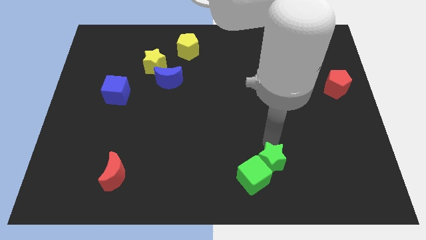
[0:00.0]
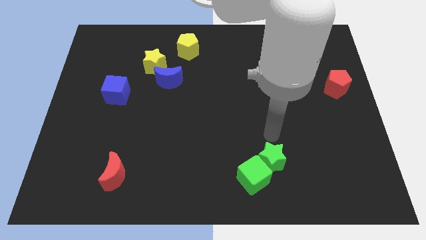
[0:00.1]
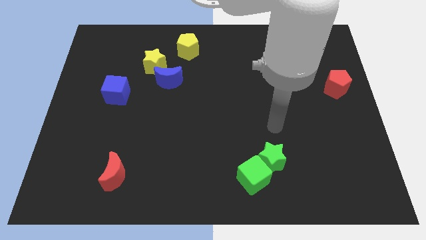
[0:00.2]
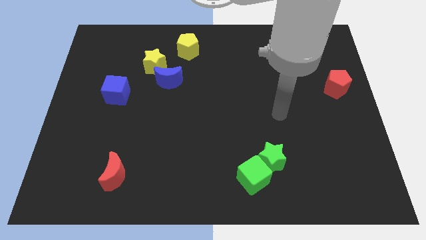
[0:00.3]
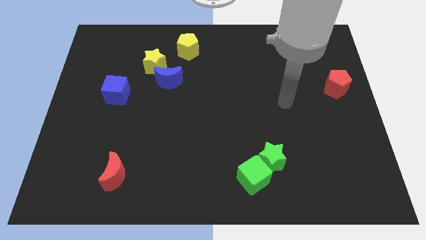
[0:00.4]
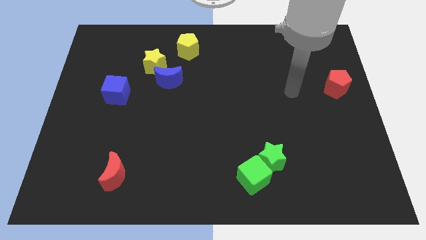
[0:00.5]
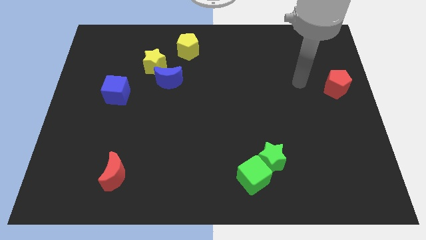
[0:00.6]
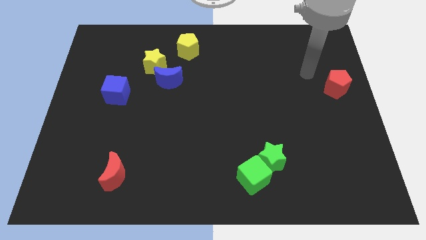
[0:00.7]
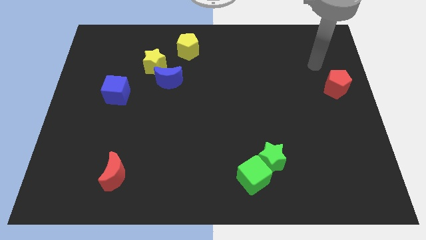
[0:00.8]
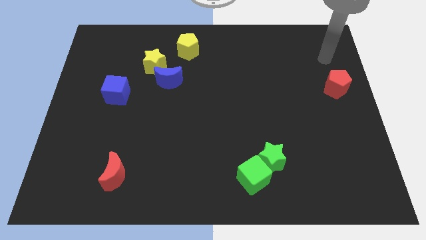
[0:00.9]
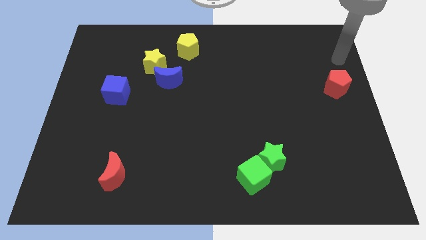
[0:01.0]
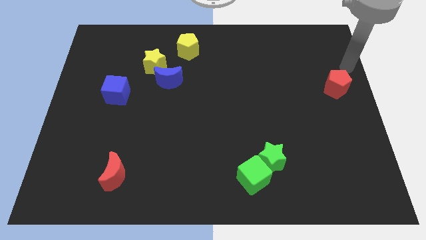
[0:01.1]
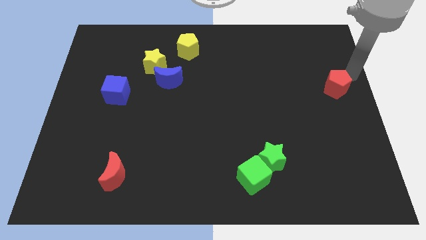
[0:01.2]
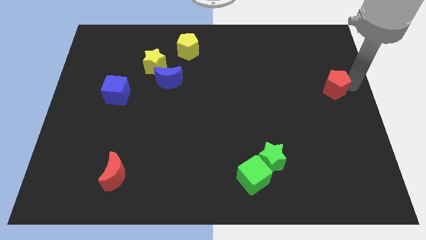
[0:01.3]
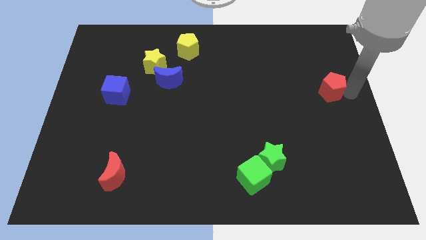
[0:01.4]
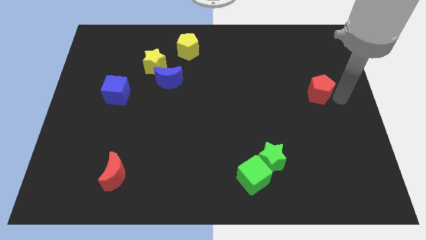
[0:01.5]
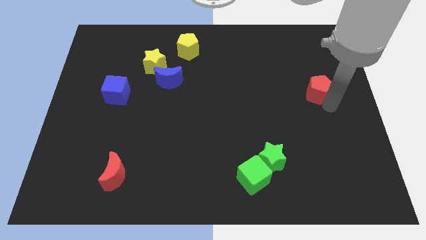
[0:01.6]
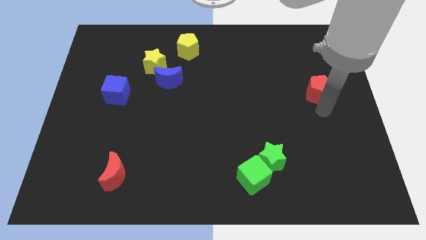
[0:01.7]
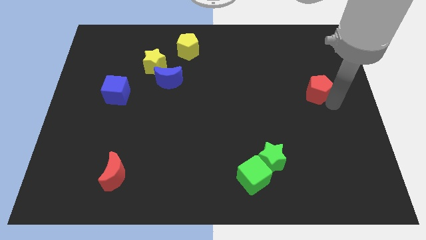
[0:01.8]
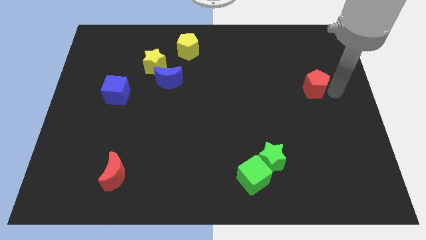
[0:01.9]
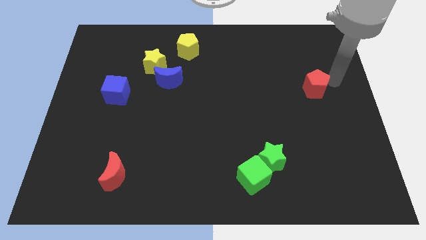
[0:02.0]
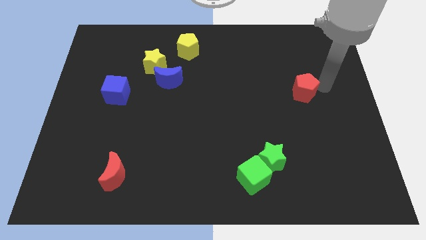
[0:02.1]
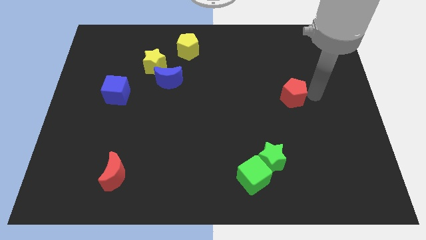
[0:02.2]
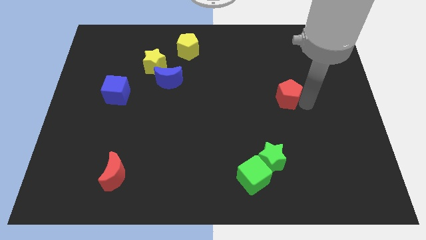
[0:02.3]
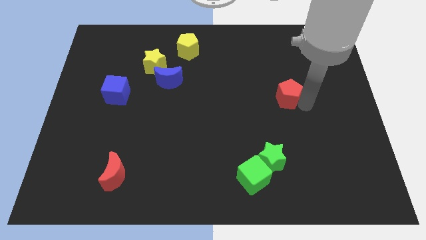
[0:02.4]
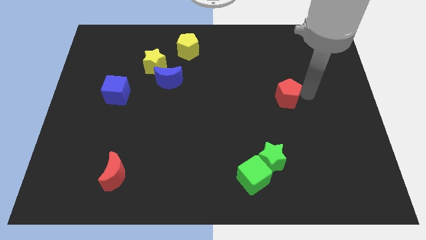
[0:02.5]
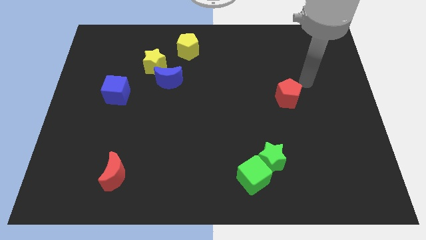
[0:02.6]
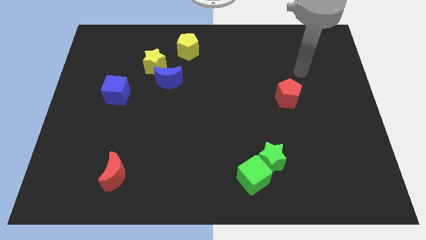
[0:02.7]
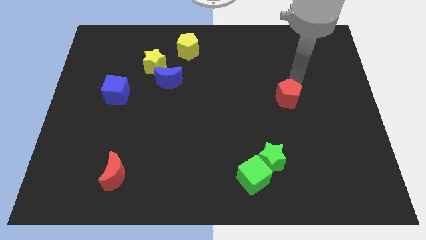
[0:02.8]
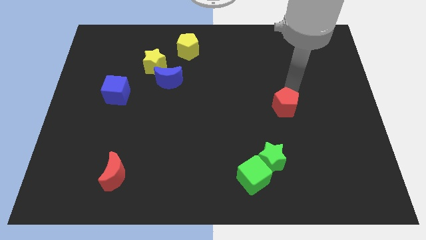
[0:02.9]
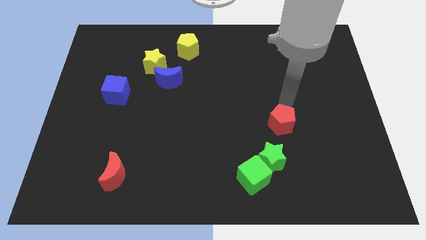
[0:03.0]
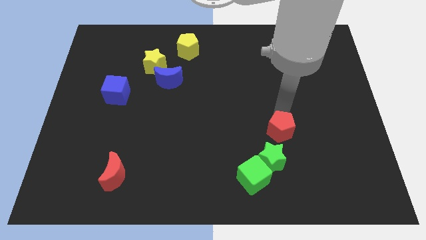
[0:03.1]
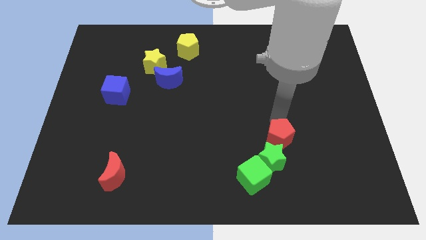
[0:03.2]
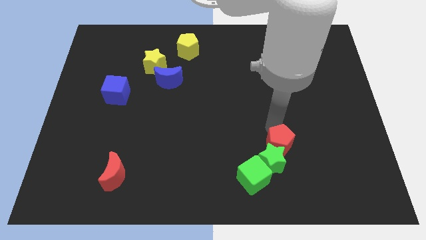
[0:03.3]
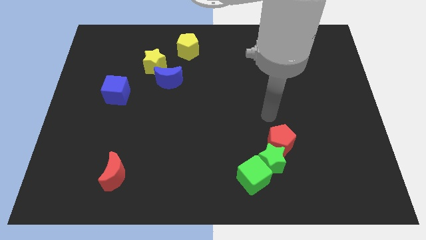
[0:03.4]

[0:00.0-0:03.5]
push the red pentagon into the top side of the green star

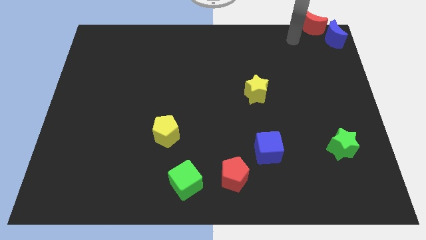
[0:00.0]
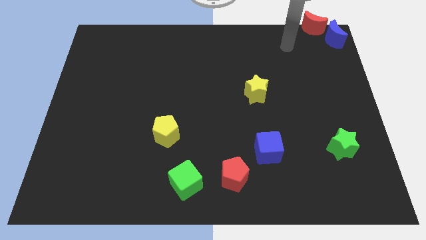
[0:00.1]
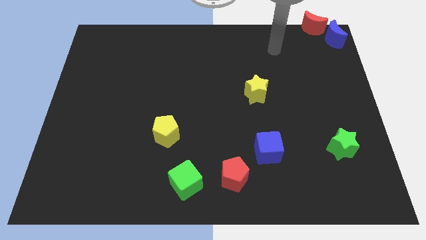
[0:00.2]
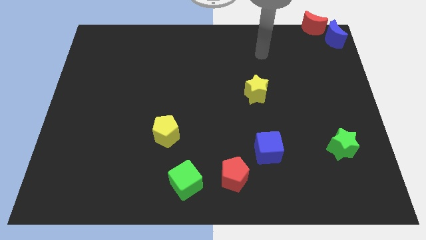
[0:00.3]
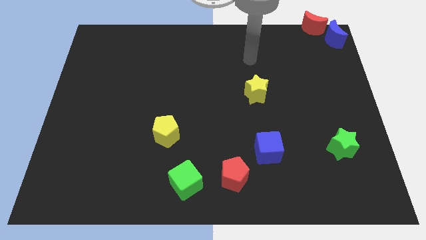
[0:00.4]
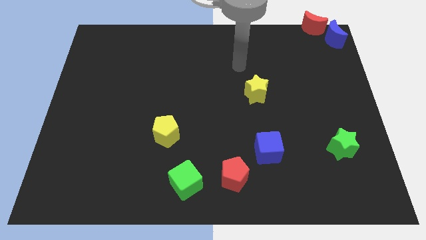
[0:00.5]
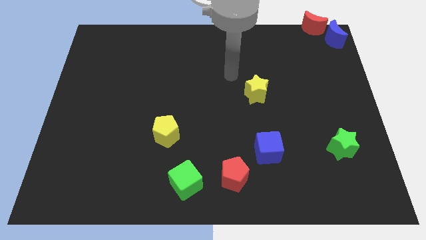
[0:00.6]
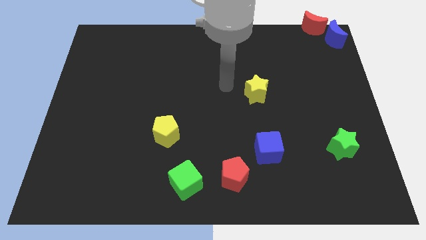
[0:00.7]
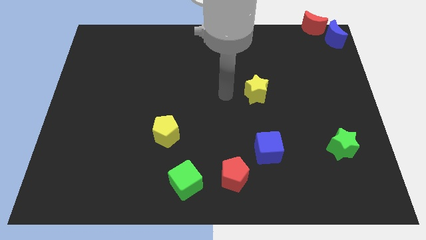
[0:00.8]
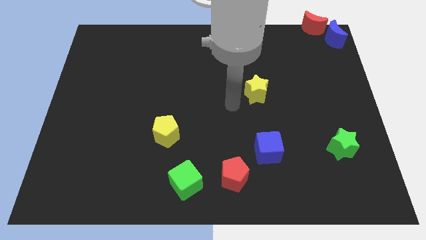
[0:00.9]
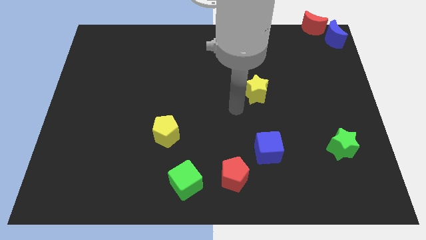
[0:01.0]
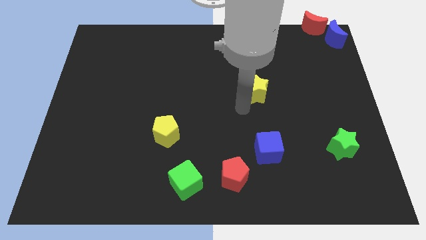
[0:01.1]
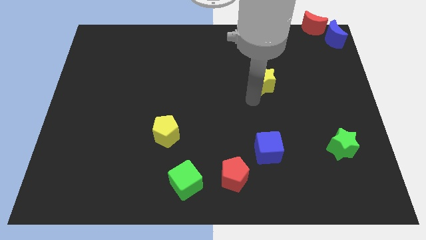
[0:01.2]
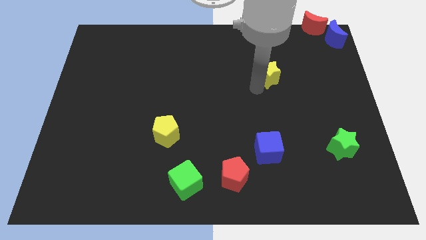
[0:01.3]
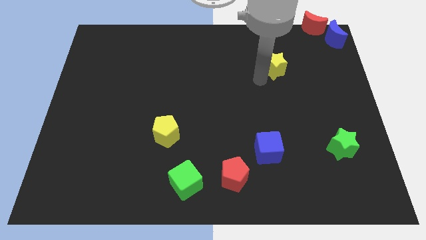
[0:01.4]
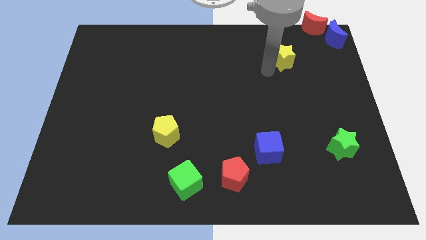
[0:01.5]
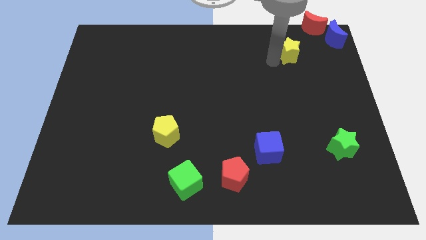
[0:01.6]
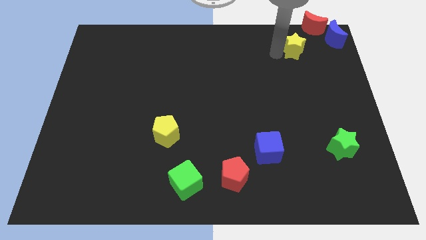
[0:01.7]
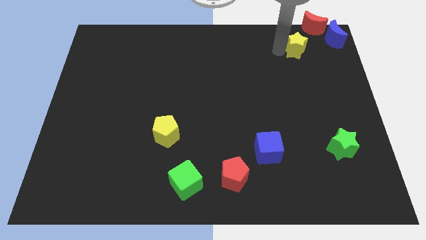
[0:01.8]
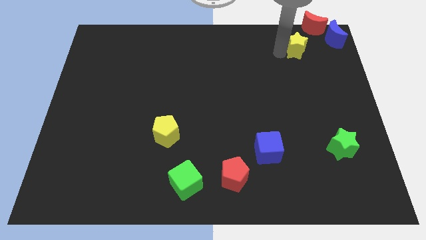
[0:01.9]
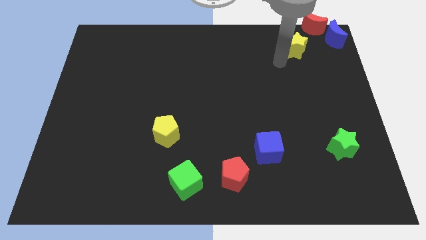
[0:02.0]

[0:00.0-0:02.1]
push the yellow star to the bottom left of the red crescent

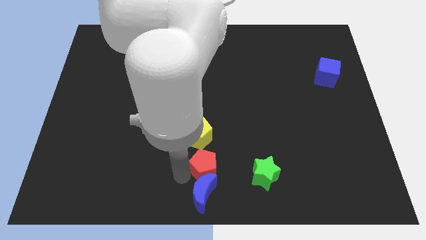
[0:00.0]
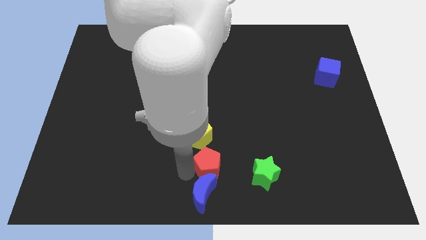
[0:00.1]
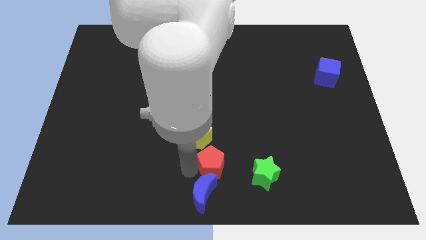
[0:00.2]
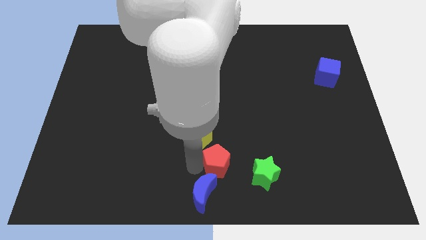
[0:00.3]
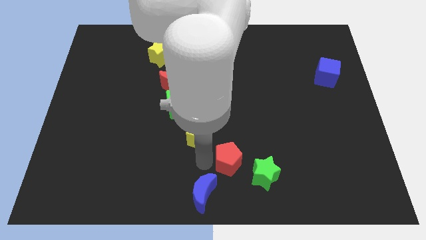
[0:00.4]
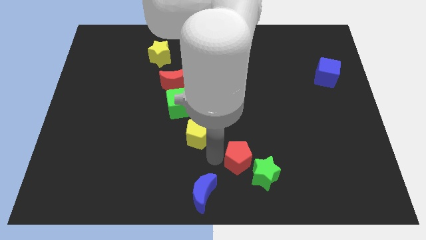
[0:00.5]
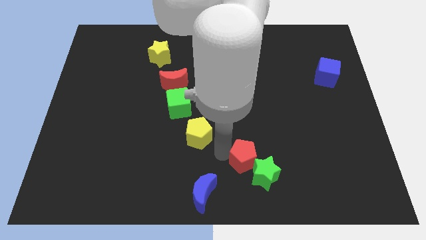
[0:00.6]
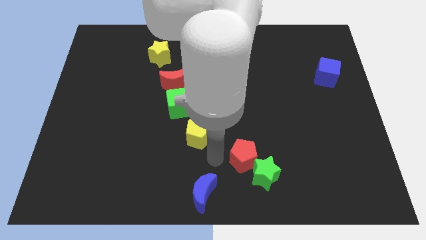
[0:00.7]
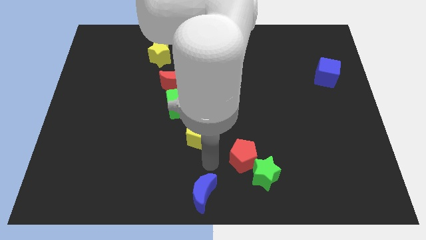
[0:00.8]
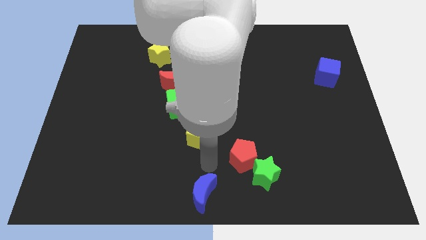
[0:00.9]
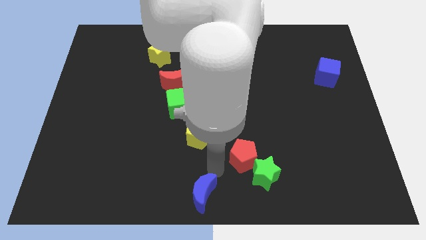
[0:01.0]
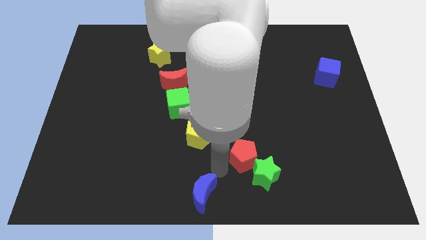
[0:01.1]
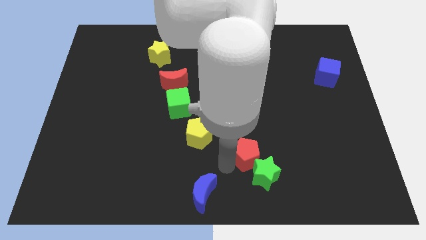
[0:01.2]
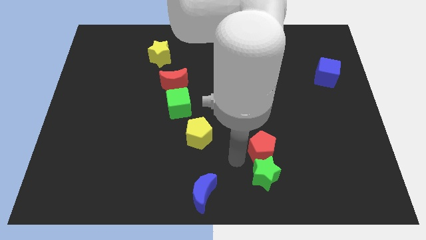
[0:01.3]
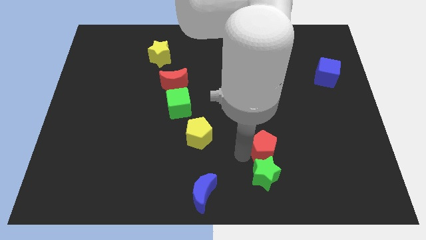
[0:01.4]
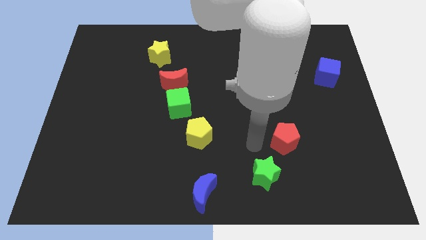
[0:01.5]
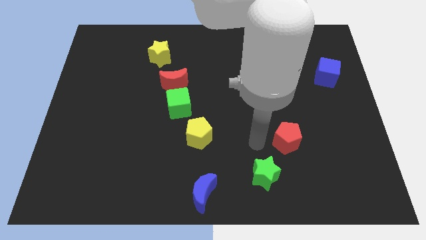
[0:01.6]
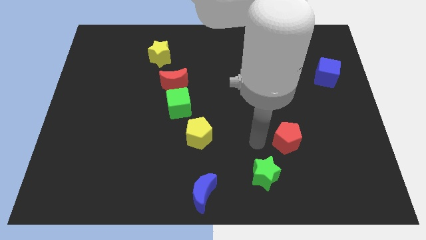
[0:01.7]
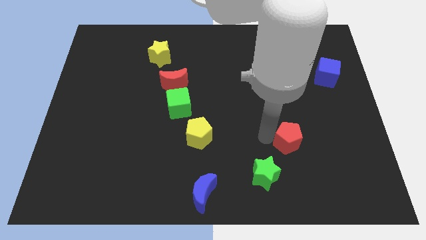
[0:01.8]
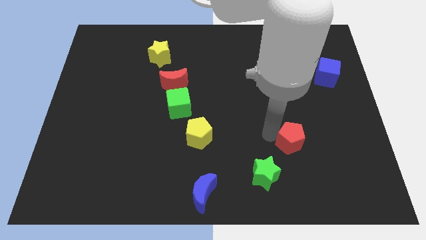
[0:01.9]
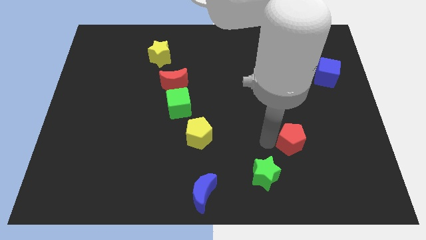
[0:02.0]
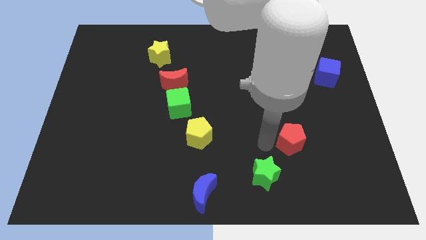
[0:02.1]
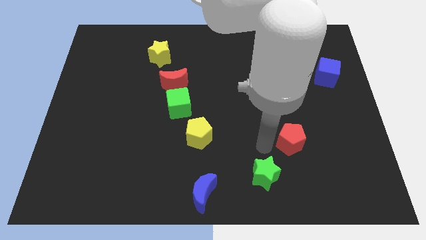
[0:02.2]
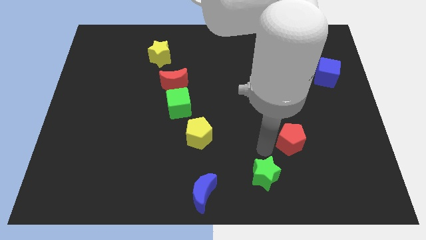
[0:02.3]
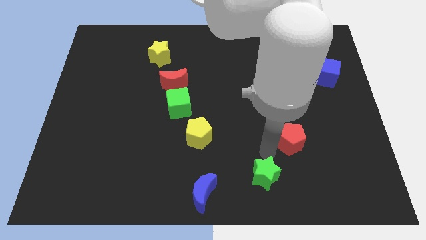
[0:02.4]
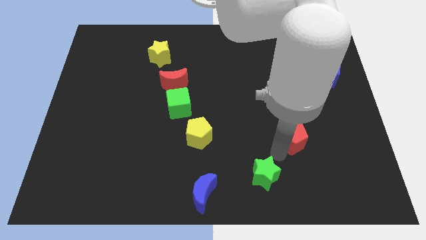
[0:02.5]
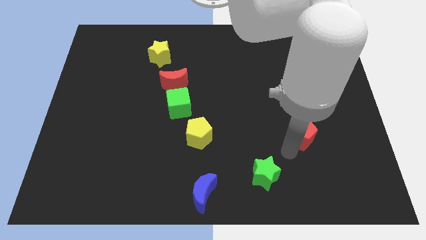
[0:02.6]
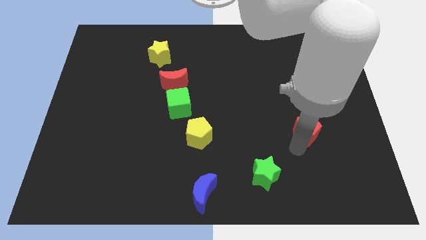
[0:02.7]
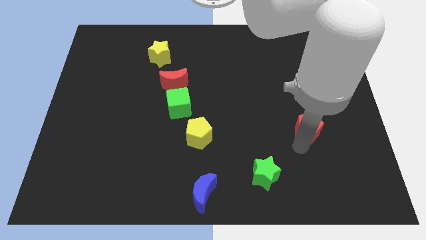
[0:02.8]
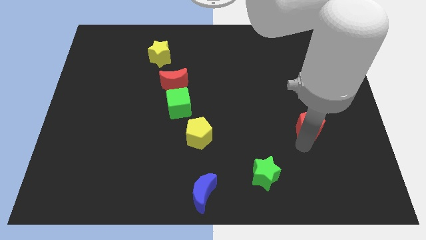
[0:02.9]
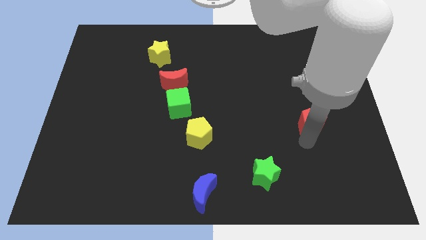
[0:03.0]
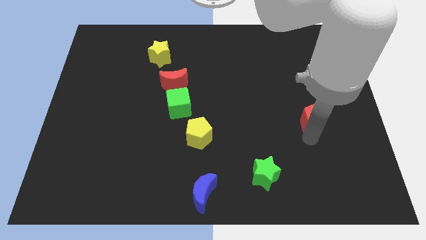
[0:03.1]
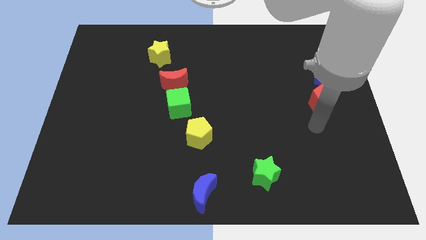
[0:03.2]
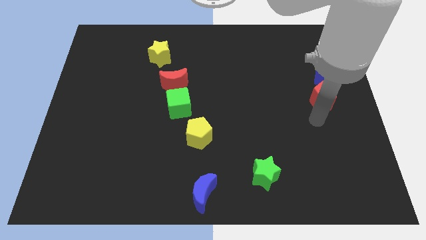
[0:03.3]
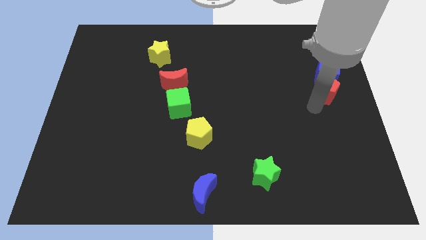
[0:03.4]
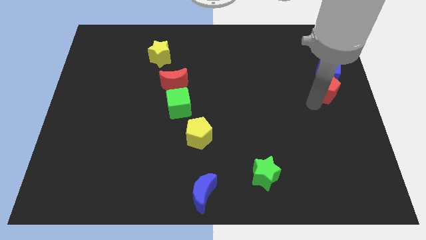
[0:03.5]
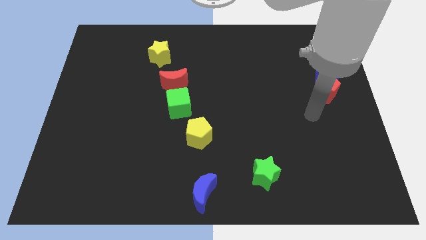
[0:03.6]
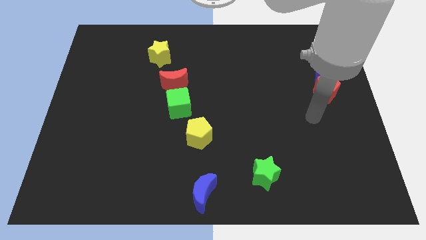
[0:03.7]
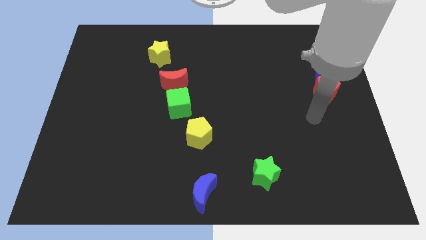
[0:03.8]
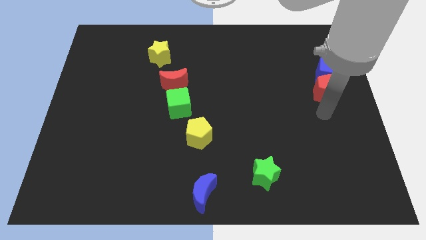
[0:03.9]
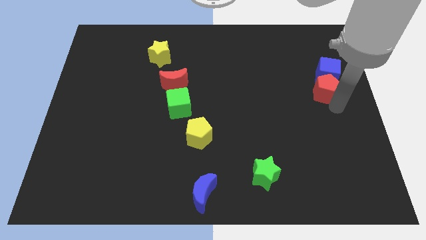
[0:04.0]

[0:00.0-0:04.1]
place red pentagon below the blue cube
